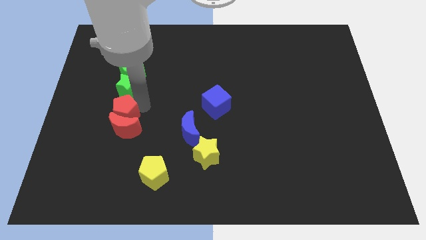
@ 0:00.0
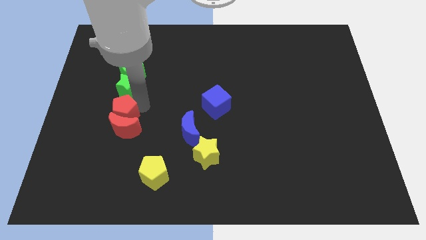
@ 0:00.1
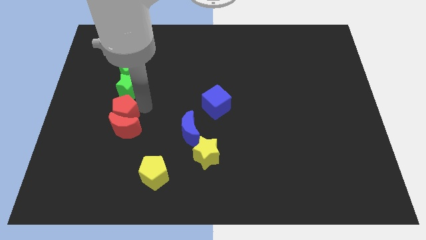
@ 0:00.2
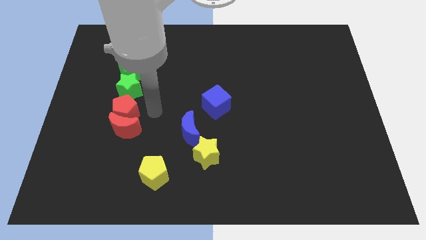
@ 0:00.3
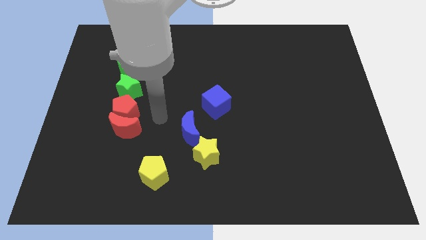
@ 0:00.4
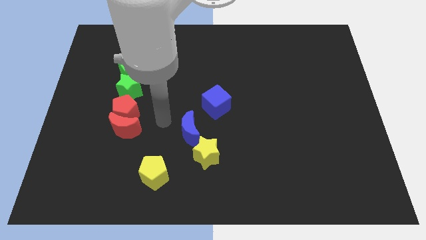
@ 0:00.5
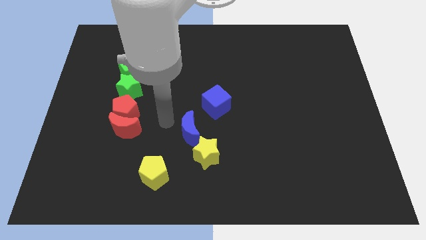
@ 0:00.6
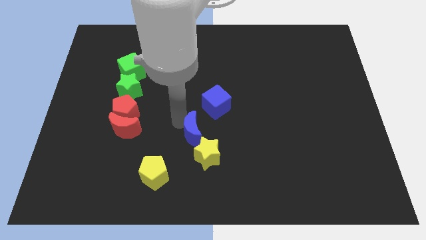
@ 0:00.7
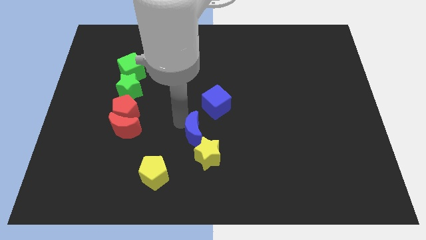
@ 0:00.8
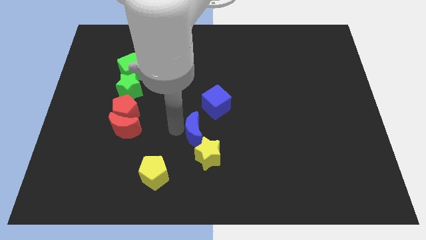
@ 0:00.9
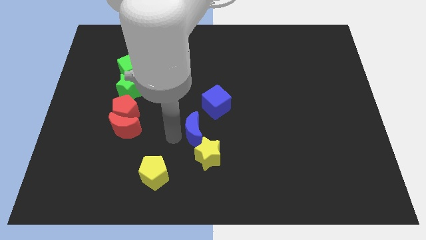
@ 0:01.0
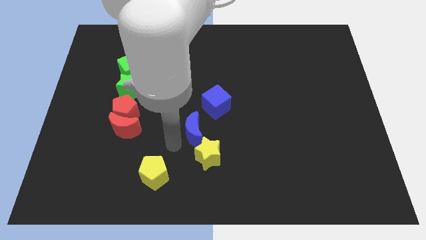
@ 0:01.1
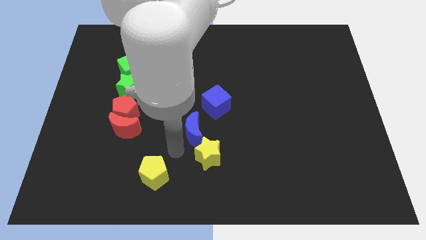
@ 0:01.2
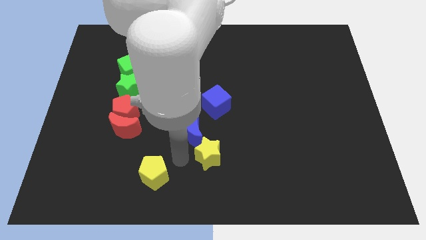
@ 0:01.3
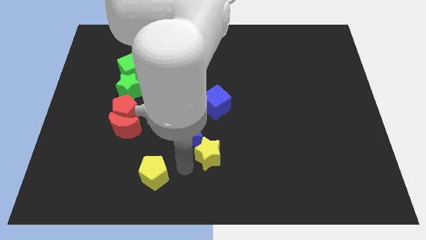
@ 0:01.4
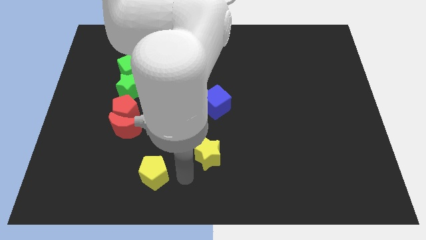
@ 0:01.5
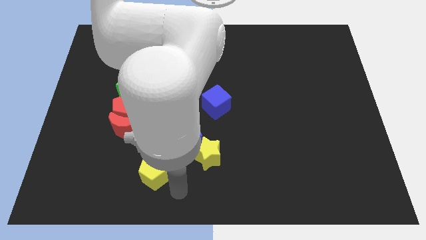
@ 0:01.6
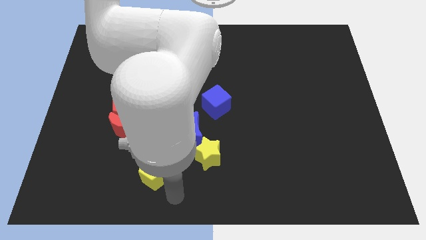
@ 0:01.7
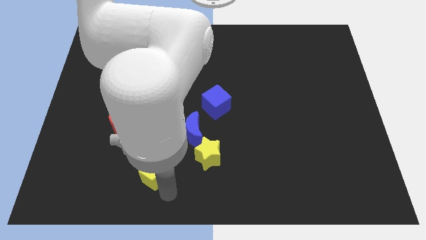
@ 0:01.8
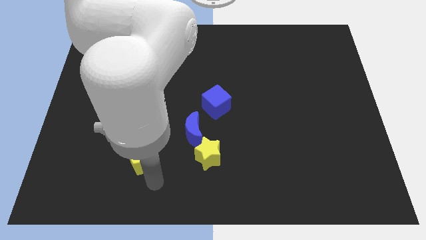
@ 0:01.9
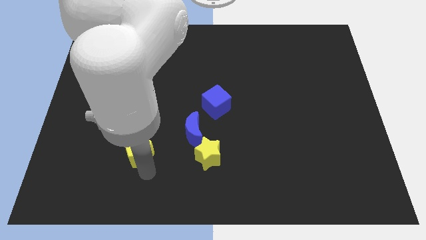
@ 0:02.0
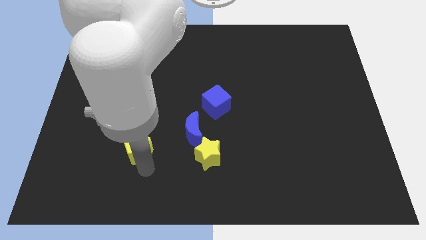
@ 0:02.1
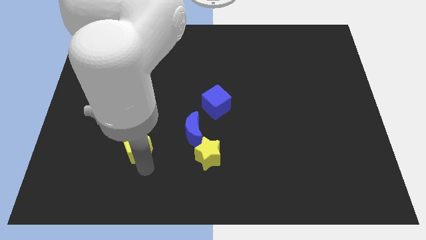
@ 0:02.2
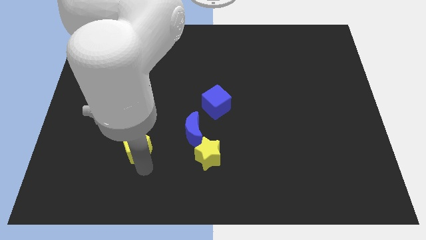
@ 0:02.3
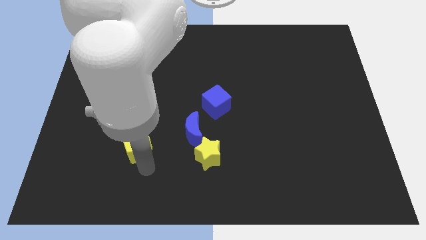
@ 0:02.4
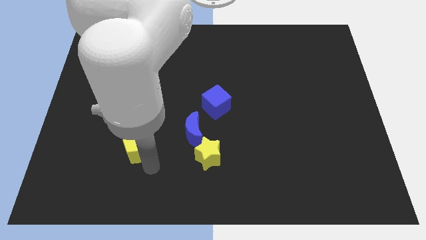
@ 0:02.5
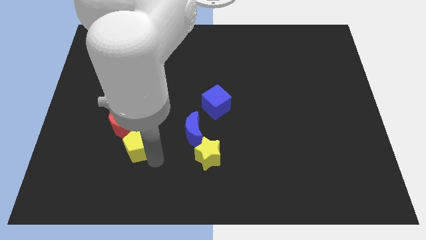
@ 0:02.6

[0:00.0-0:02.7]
place yellow pentagon to the bottom right of red moon

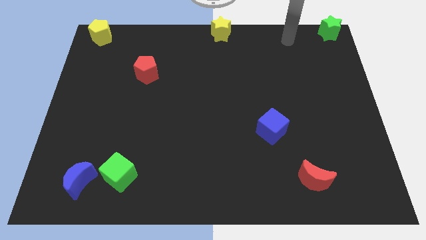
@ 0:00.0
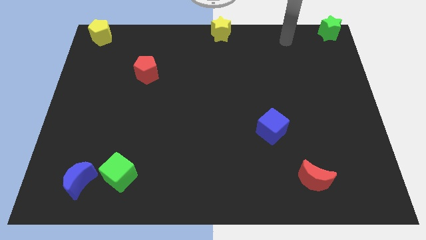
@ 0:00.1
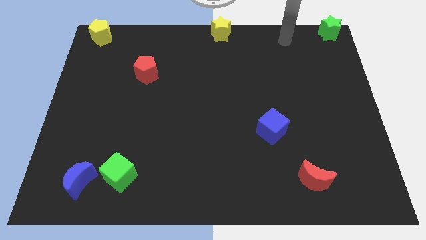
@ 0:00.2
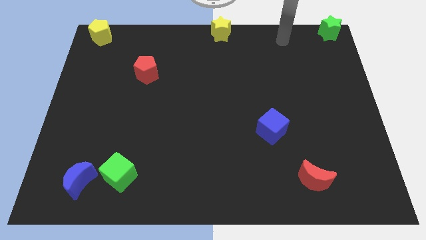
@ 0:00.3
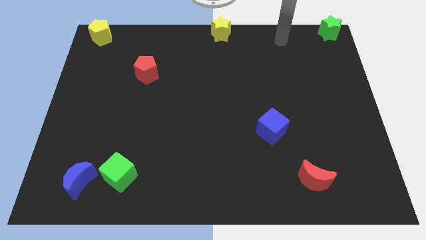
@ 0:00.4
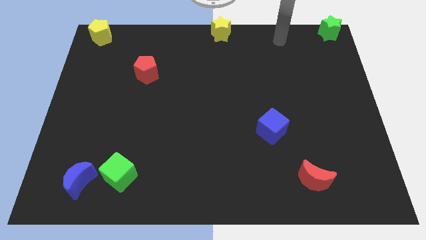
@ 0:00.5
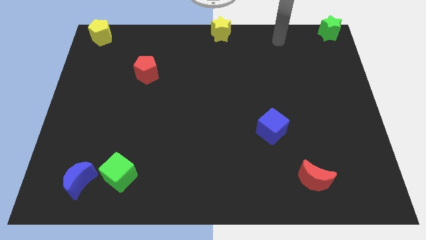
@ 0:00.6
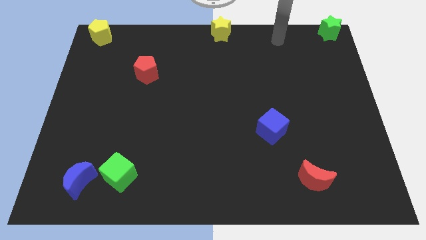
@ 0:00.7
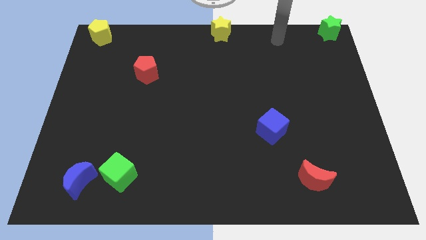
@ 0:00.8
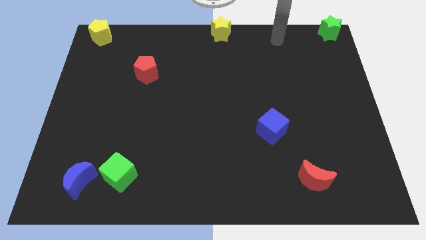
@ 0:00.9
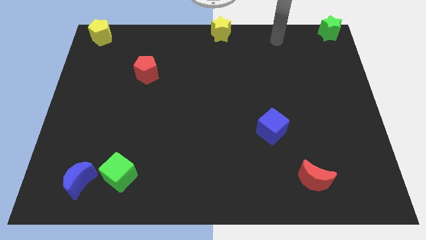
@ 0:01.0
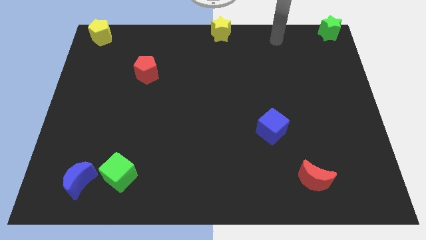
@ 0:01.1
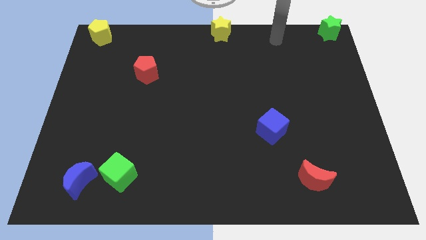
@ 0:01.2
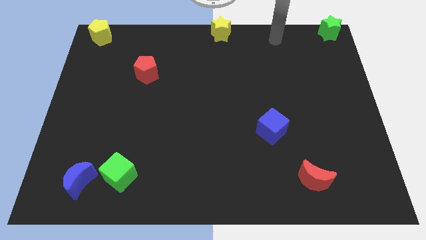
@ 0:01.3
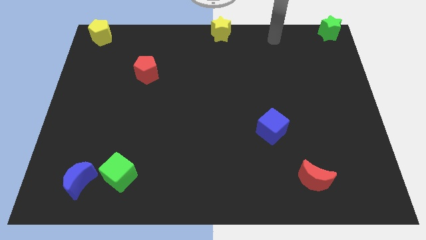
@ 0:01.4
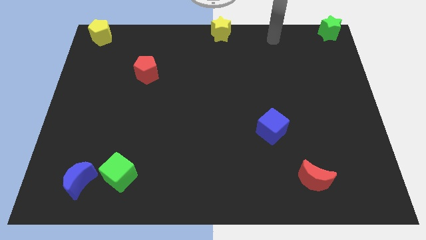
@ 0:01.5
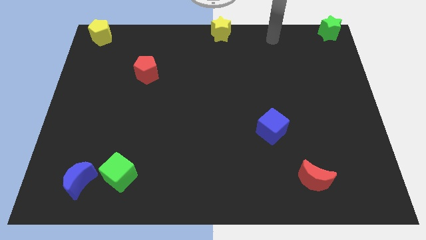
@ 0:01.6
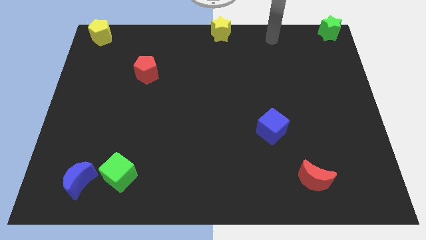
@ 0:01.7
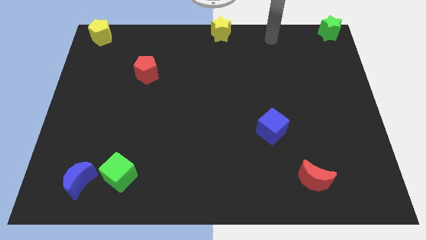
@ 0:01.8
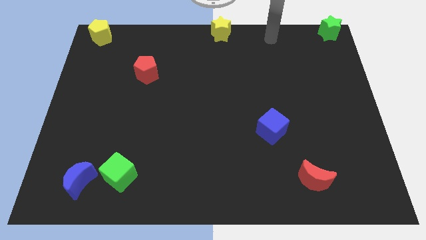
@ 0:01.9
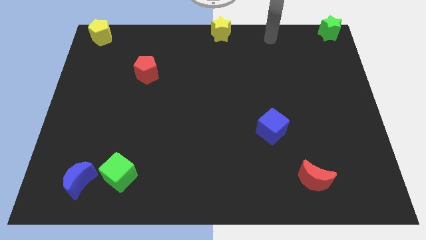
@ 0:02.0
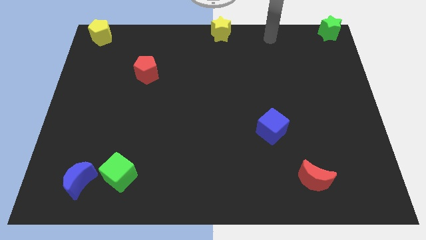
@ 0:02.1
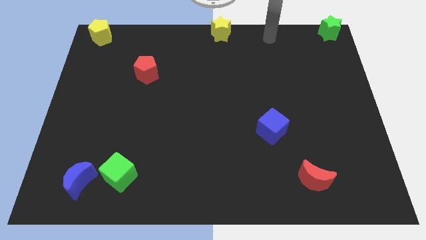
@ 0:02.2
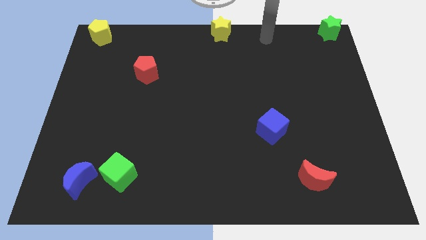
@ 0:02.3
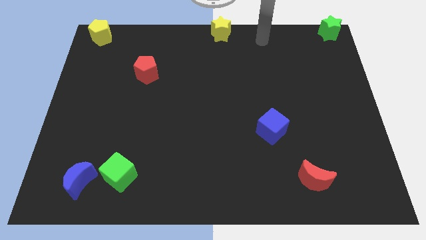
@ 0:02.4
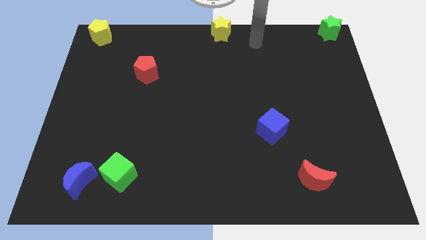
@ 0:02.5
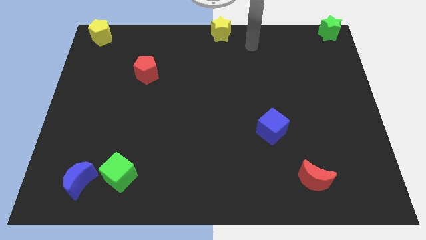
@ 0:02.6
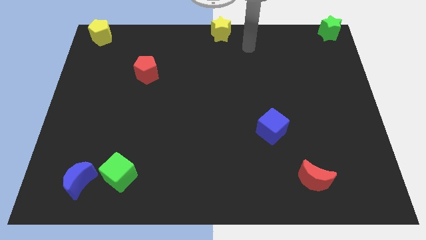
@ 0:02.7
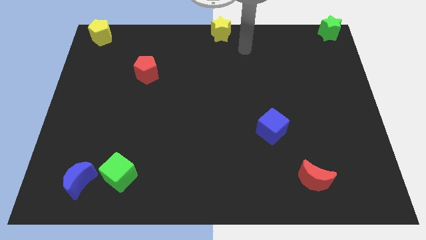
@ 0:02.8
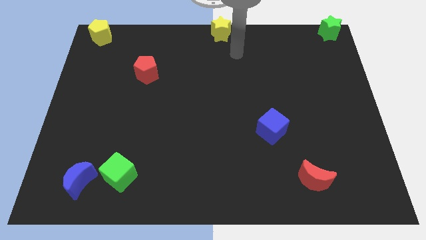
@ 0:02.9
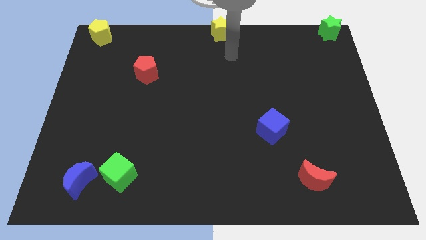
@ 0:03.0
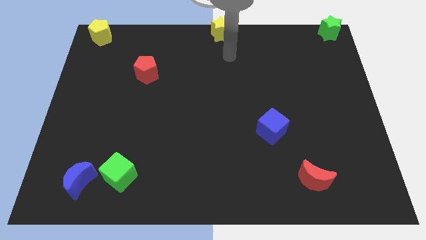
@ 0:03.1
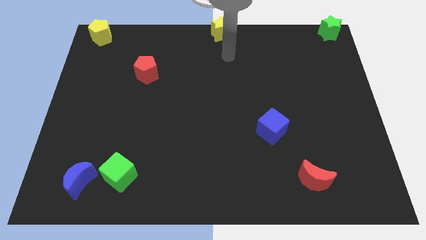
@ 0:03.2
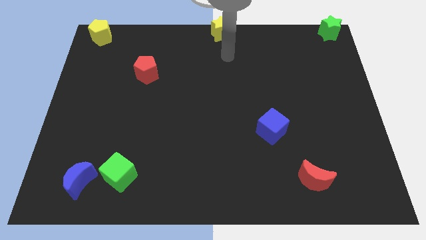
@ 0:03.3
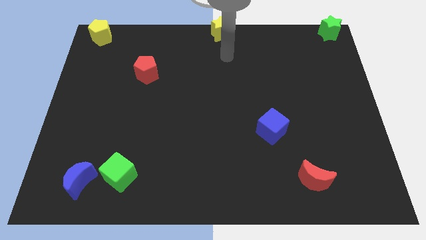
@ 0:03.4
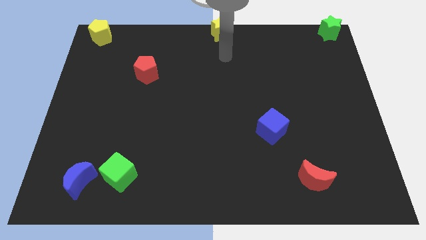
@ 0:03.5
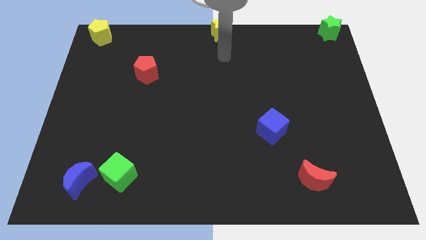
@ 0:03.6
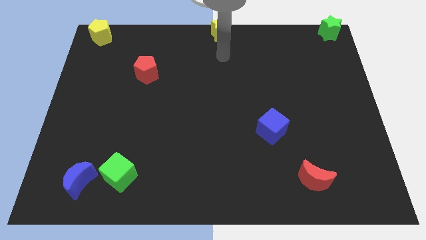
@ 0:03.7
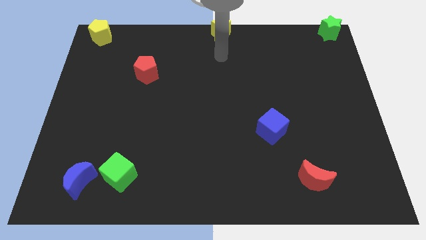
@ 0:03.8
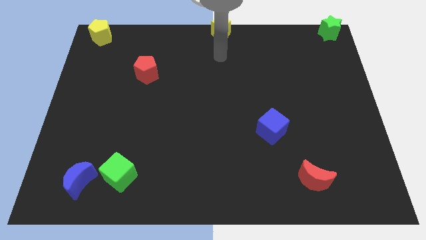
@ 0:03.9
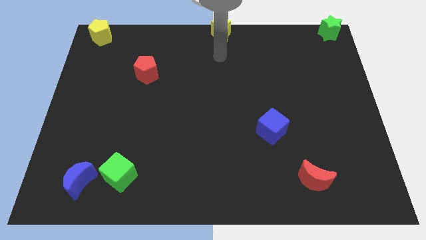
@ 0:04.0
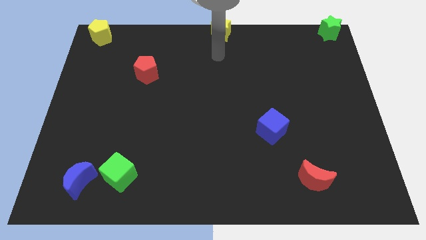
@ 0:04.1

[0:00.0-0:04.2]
move your arm away from the green star

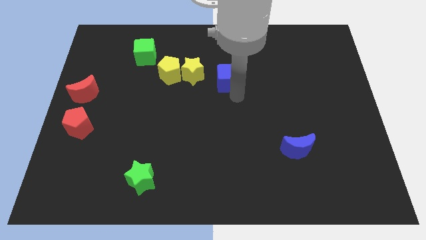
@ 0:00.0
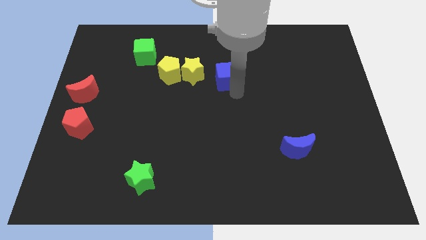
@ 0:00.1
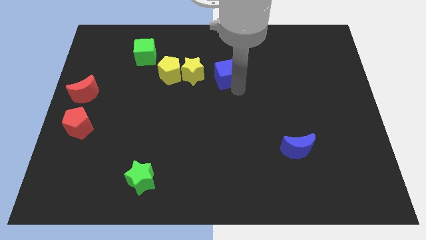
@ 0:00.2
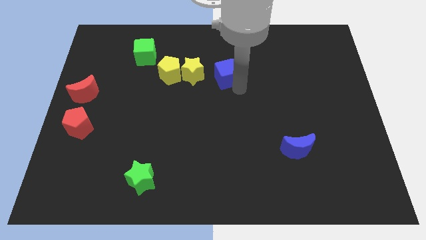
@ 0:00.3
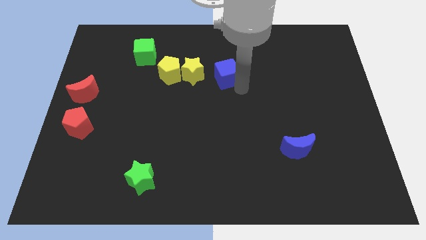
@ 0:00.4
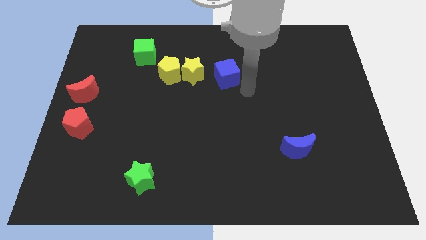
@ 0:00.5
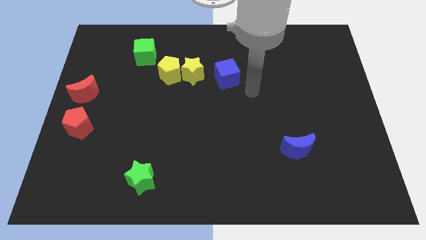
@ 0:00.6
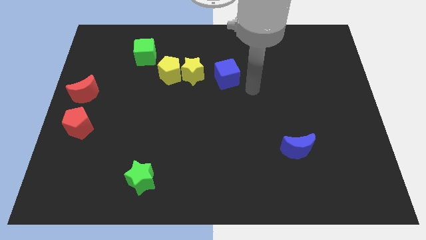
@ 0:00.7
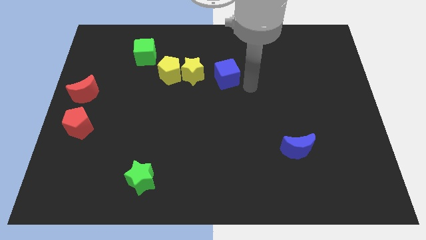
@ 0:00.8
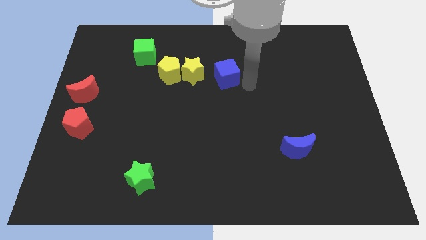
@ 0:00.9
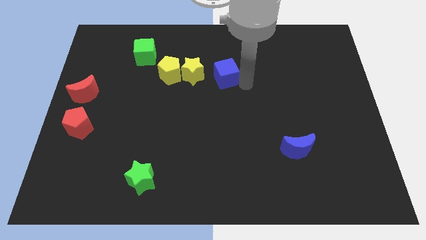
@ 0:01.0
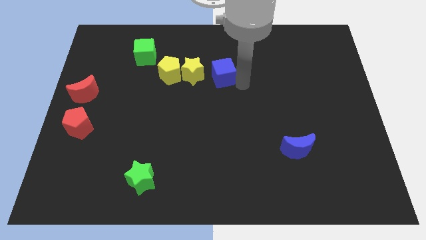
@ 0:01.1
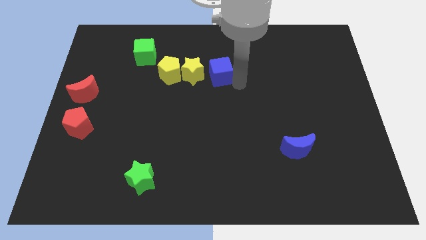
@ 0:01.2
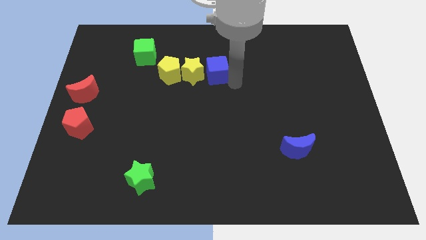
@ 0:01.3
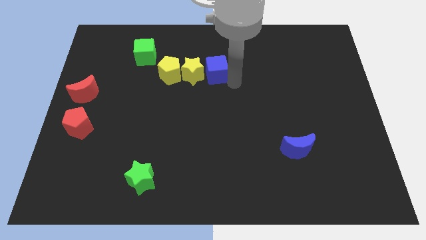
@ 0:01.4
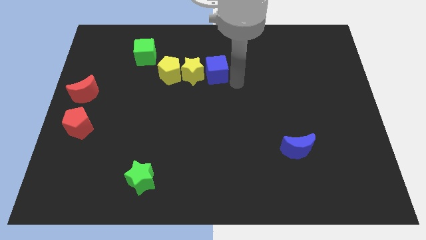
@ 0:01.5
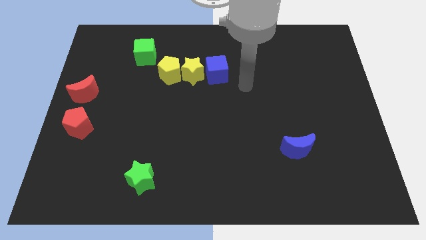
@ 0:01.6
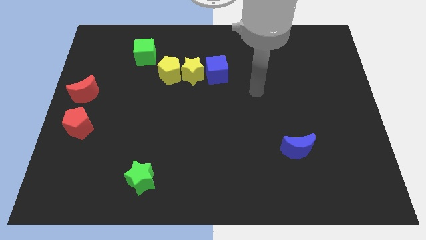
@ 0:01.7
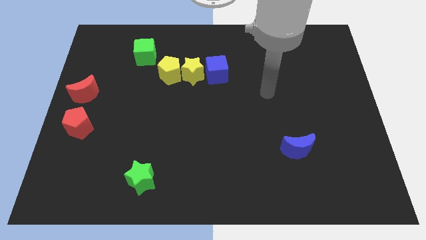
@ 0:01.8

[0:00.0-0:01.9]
put the blue cube on the right side of the yellow star
